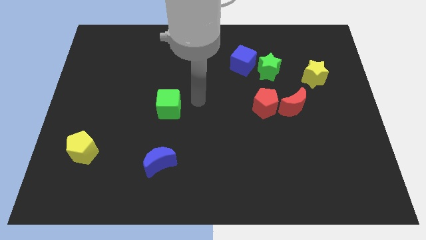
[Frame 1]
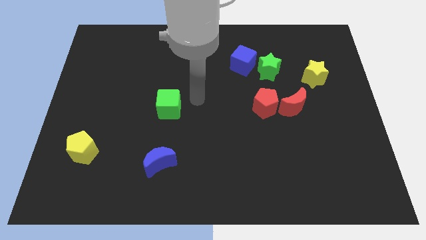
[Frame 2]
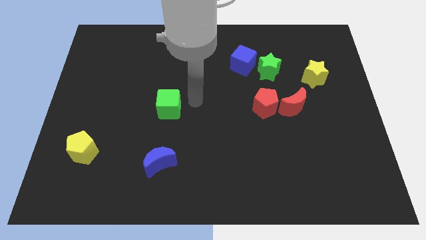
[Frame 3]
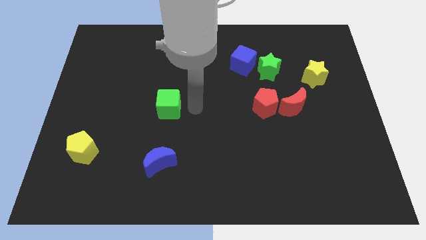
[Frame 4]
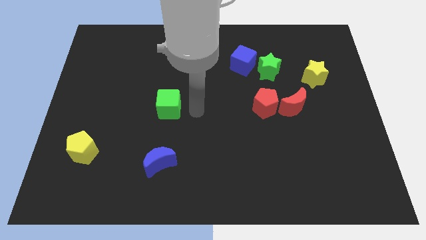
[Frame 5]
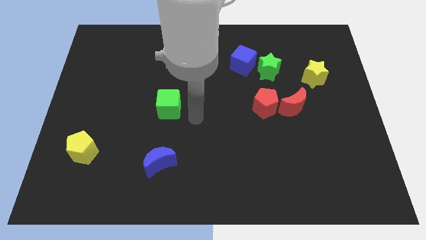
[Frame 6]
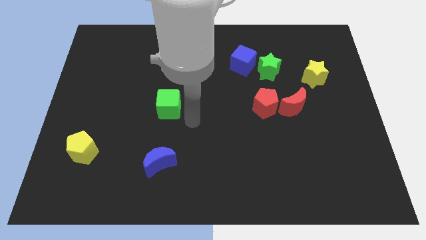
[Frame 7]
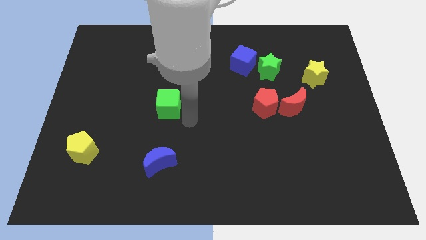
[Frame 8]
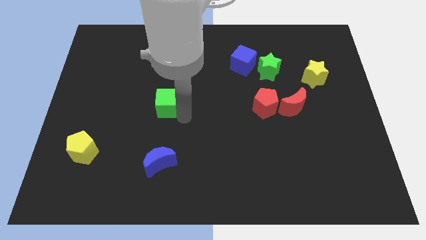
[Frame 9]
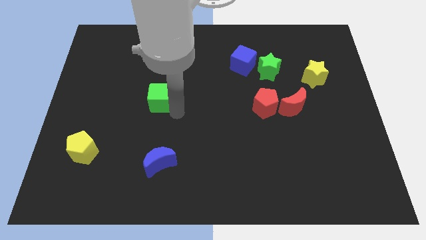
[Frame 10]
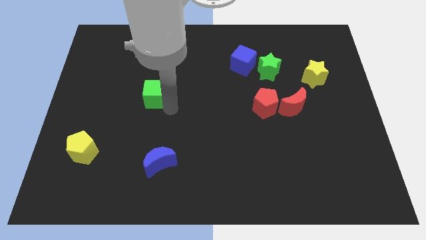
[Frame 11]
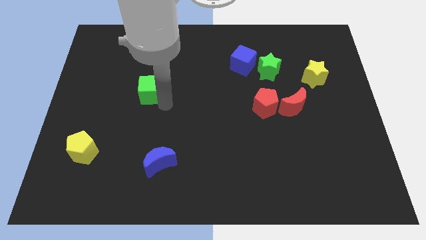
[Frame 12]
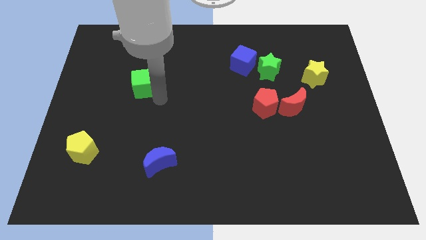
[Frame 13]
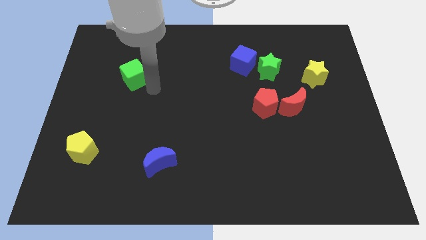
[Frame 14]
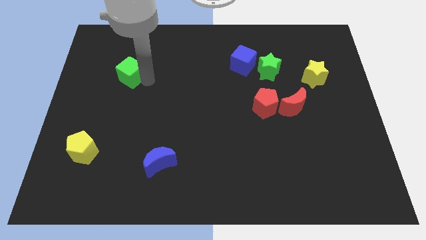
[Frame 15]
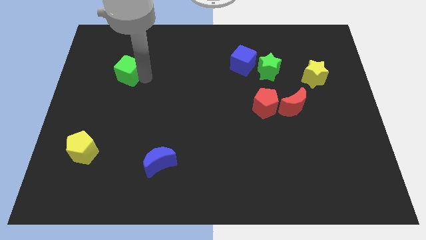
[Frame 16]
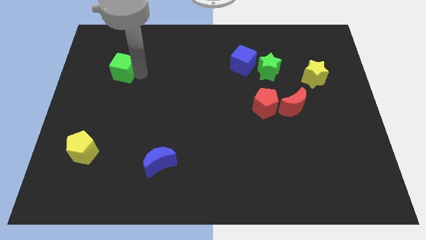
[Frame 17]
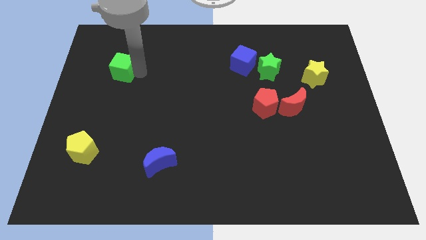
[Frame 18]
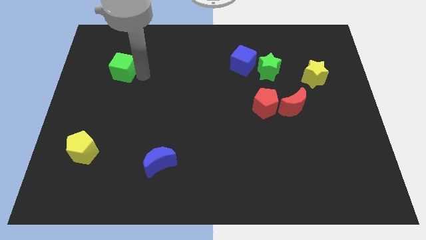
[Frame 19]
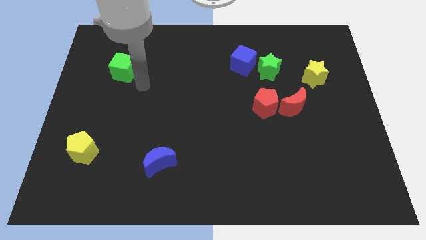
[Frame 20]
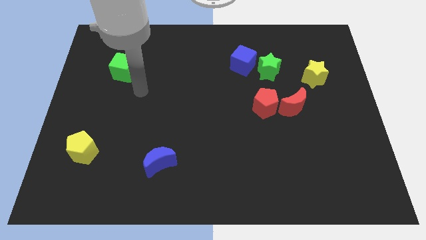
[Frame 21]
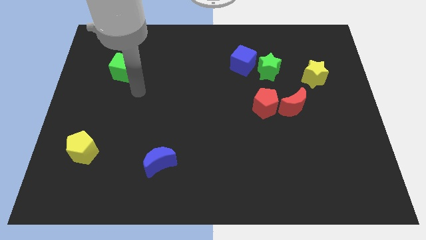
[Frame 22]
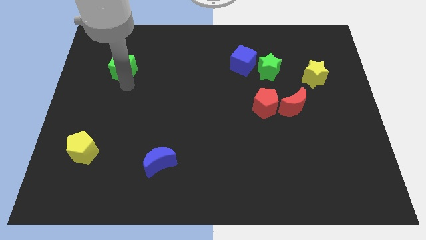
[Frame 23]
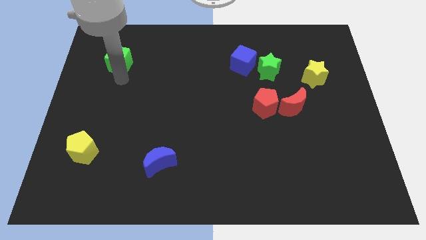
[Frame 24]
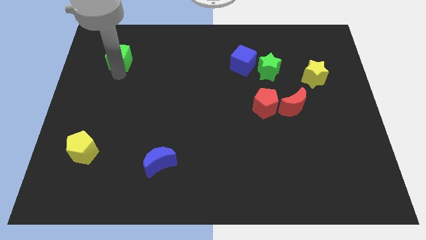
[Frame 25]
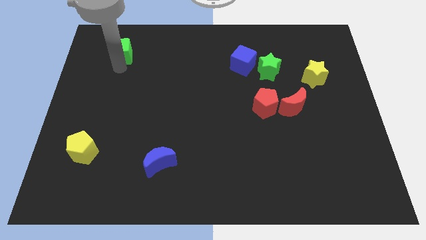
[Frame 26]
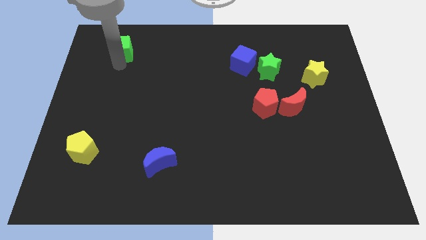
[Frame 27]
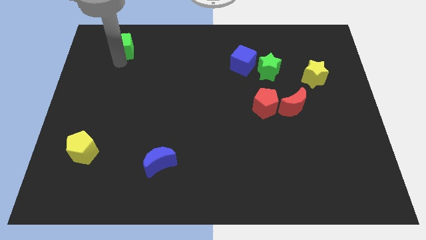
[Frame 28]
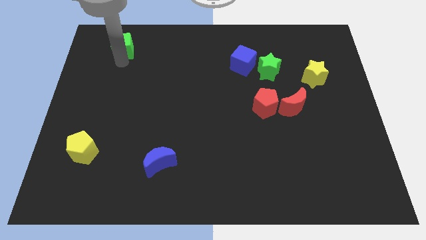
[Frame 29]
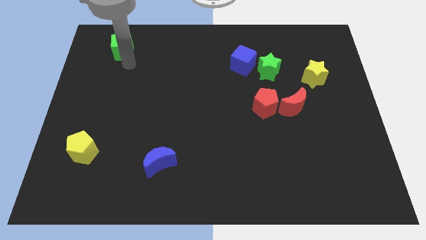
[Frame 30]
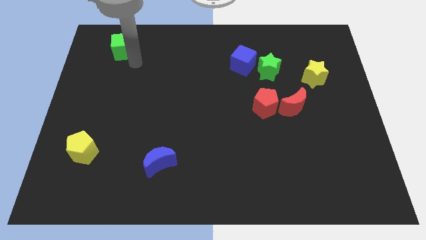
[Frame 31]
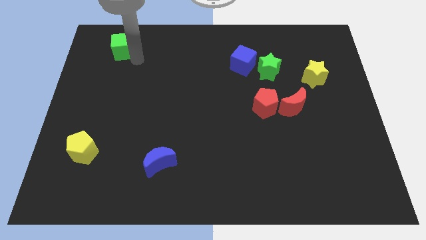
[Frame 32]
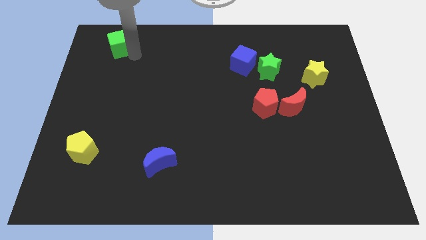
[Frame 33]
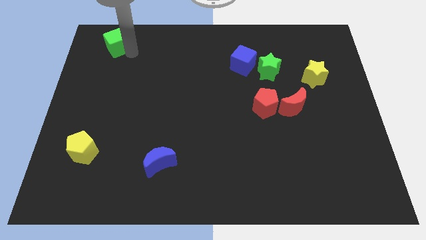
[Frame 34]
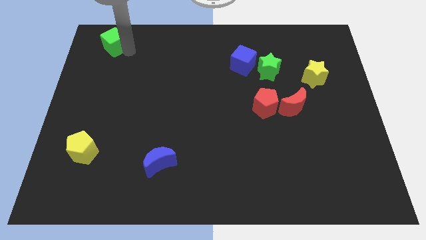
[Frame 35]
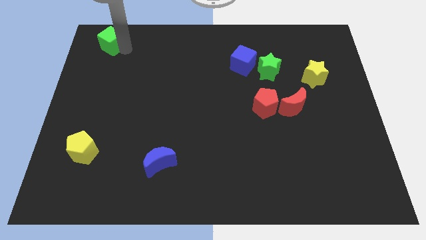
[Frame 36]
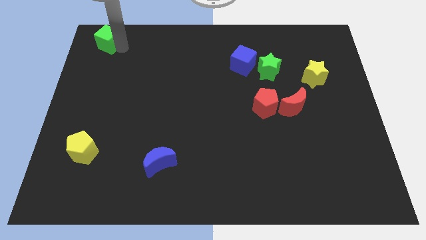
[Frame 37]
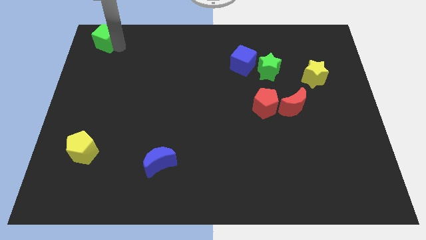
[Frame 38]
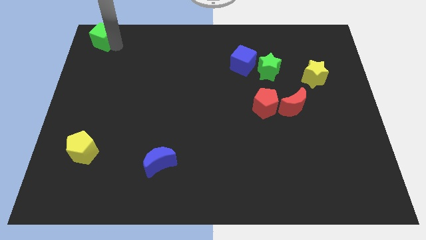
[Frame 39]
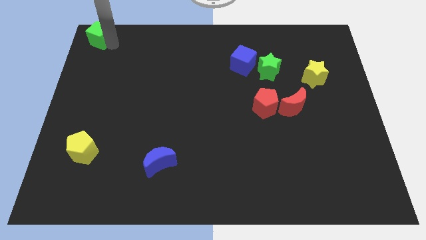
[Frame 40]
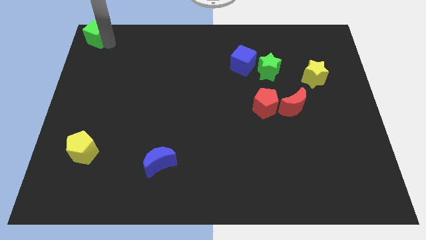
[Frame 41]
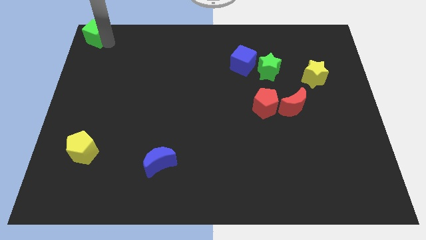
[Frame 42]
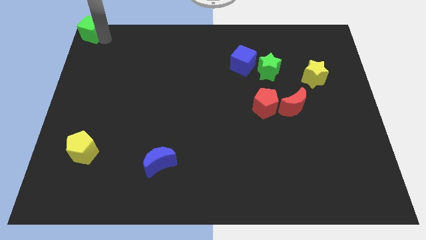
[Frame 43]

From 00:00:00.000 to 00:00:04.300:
place the green cube at the top left corner of the board

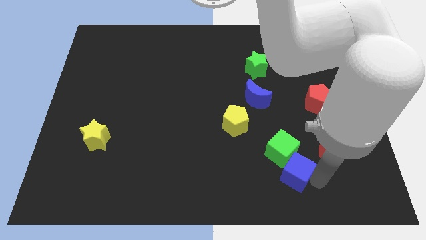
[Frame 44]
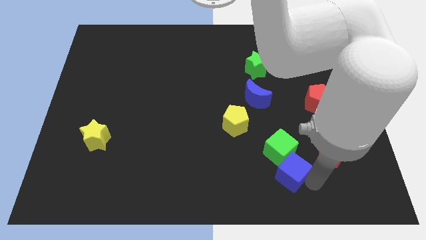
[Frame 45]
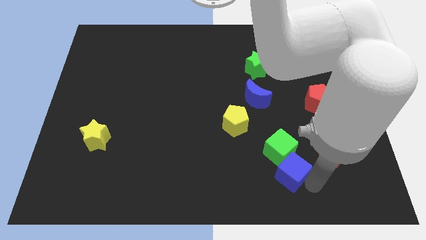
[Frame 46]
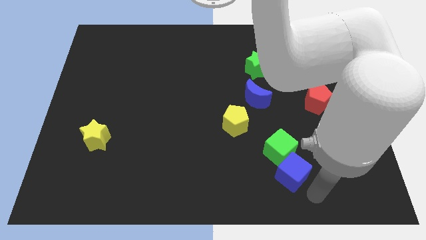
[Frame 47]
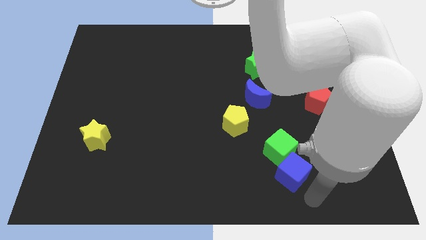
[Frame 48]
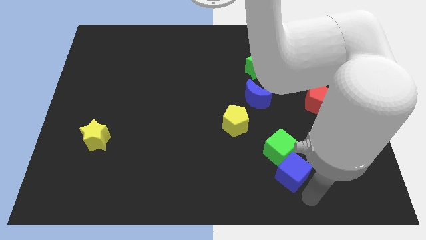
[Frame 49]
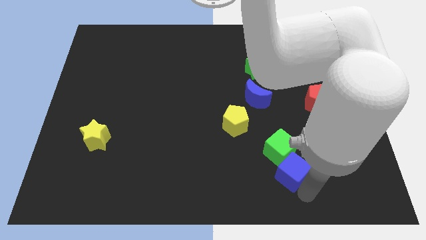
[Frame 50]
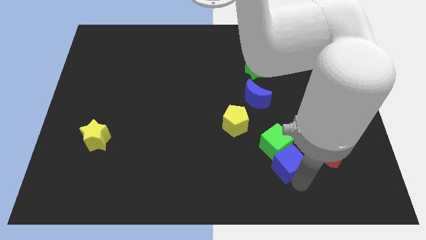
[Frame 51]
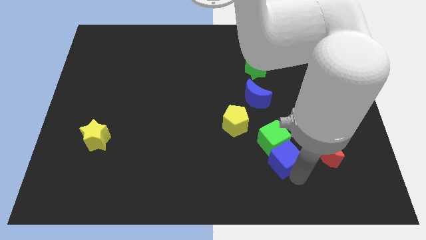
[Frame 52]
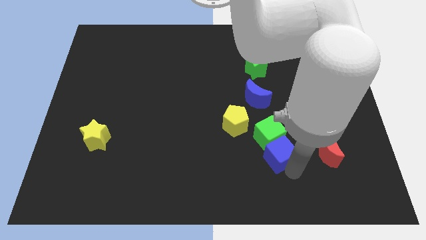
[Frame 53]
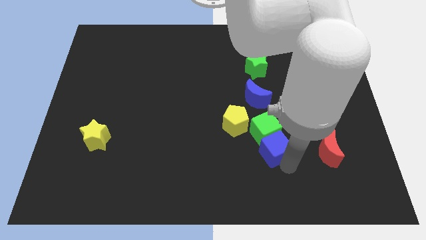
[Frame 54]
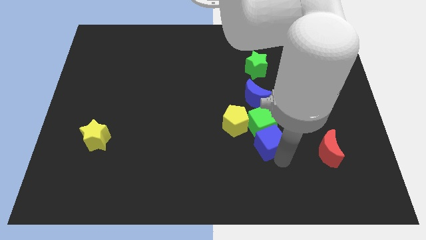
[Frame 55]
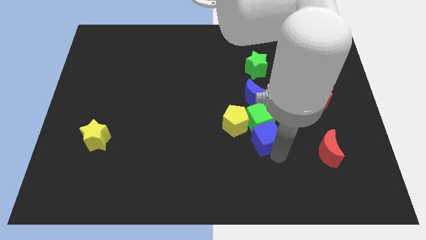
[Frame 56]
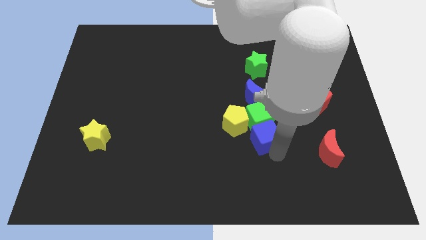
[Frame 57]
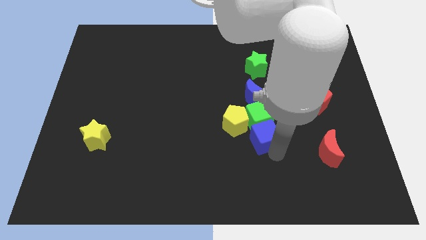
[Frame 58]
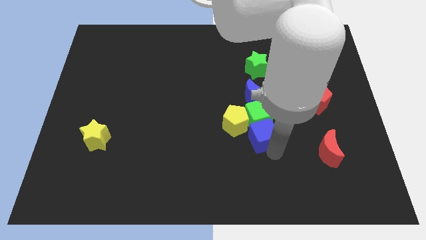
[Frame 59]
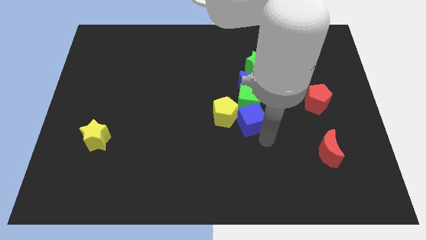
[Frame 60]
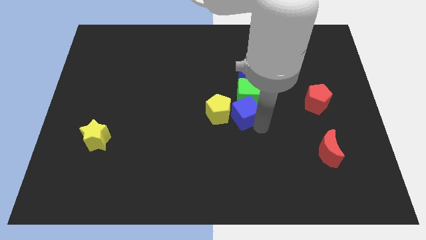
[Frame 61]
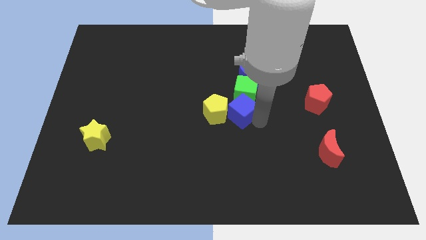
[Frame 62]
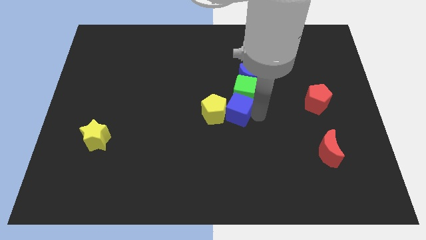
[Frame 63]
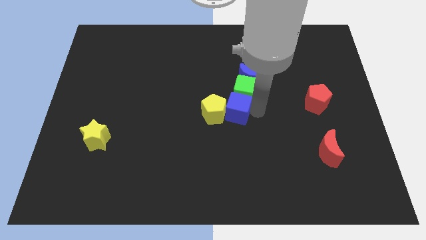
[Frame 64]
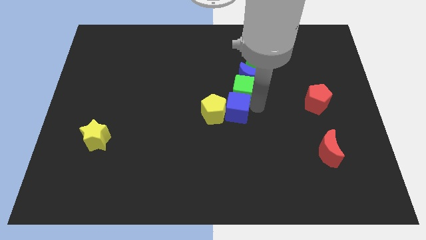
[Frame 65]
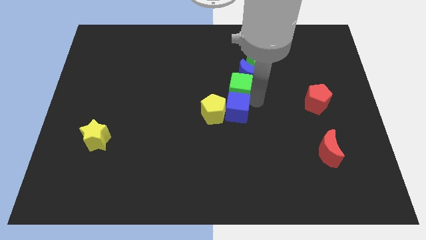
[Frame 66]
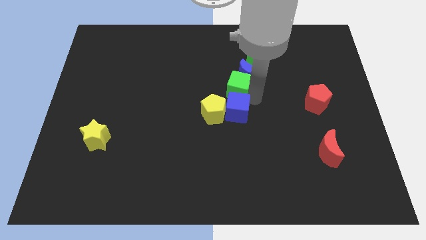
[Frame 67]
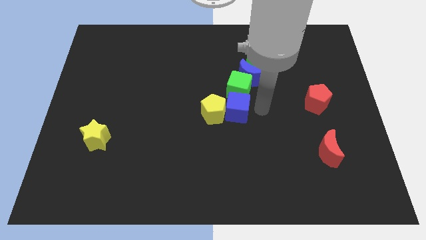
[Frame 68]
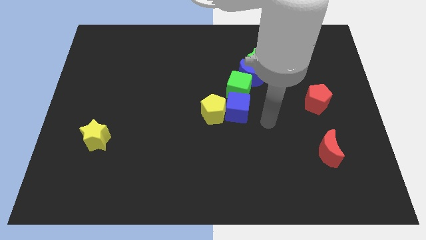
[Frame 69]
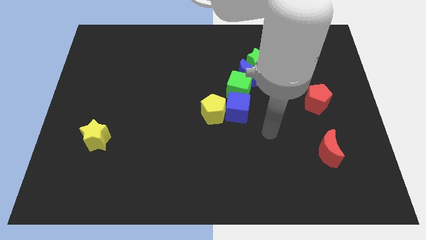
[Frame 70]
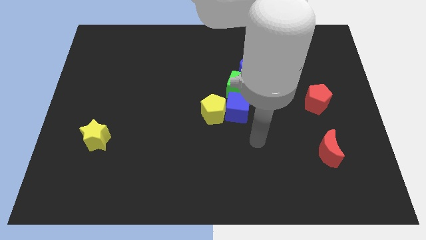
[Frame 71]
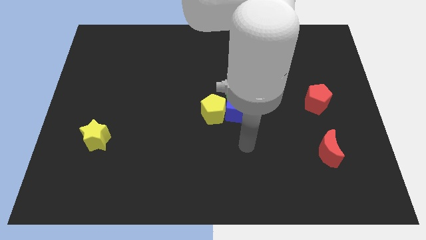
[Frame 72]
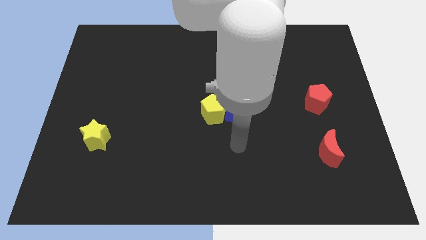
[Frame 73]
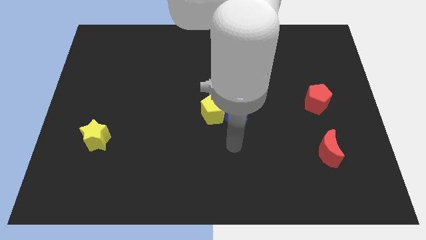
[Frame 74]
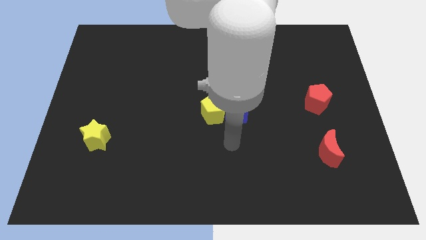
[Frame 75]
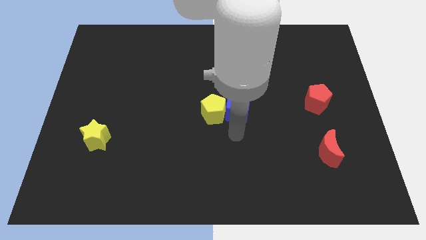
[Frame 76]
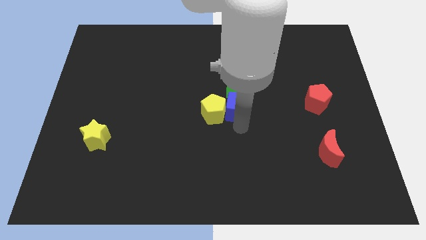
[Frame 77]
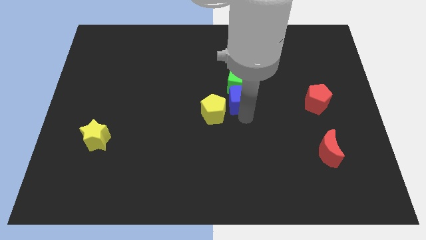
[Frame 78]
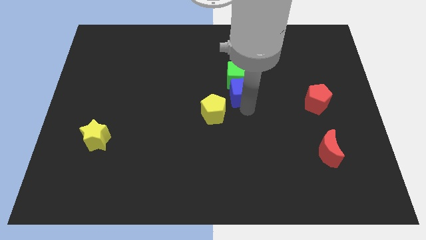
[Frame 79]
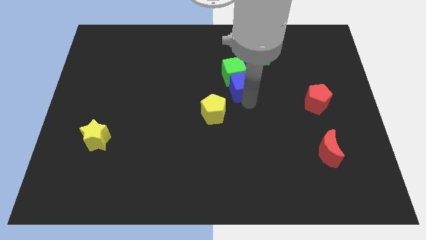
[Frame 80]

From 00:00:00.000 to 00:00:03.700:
move the cubes to the top of the board

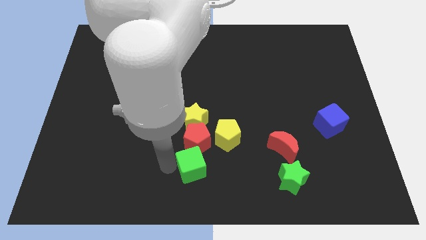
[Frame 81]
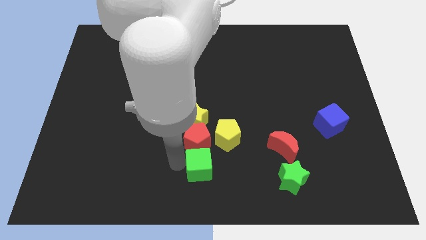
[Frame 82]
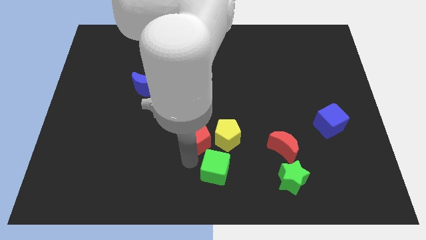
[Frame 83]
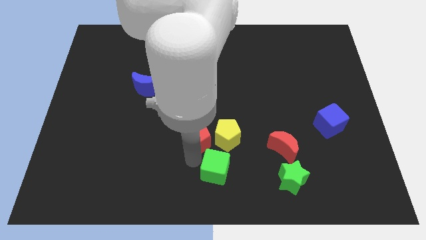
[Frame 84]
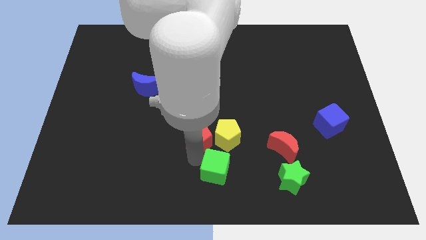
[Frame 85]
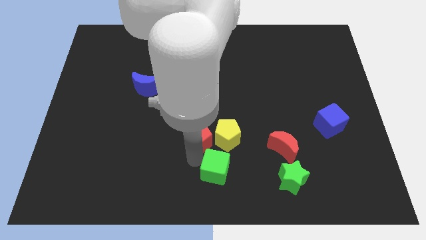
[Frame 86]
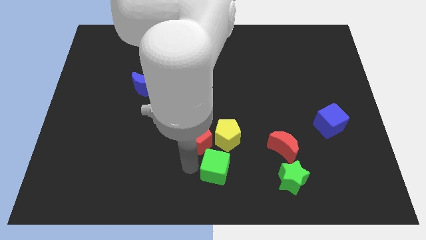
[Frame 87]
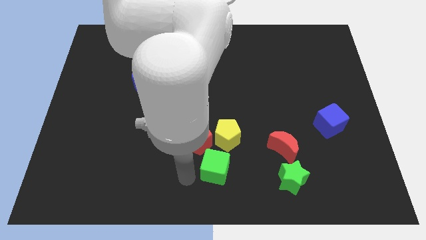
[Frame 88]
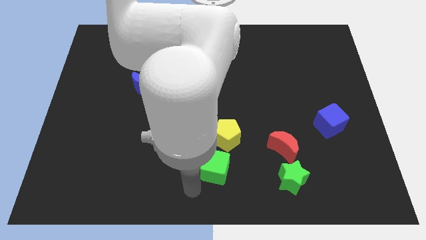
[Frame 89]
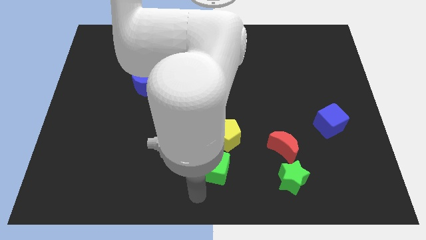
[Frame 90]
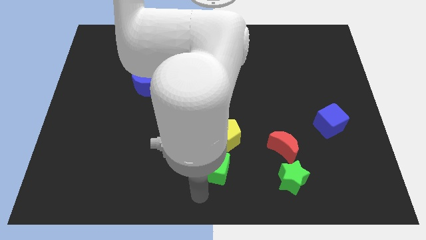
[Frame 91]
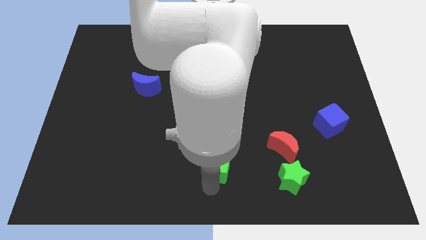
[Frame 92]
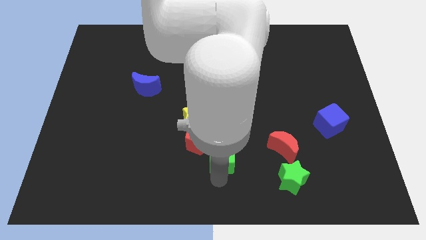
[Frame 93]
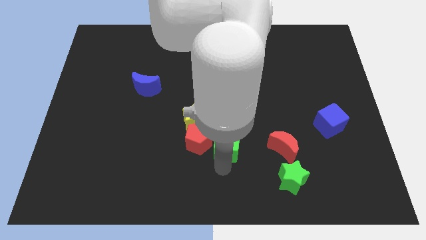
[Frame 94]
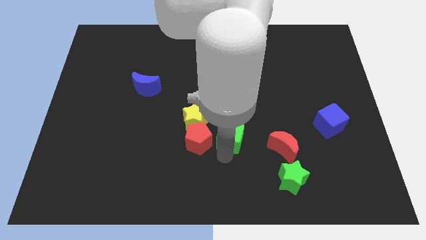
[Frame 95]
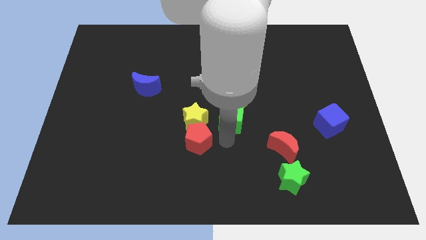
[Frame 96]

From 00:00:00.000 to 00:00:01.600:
move the green cube into the yellow pentagon
